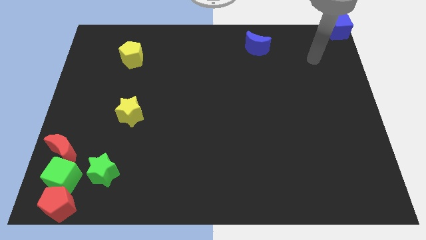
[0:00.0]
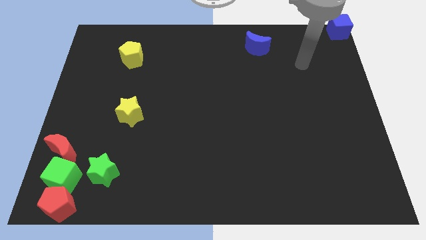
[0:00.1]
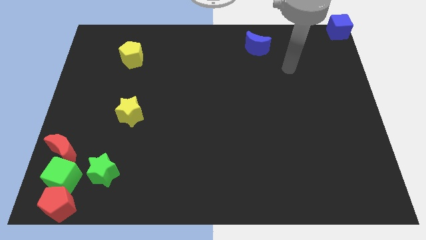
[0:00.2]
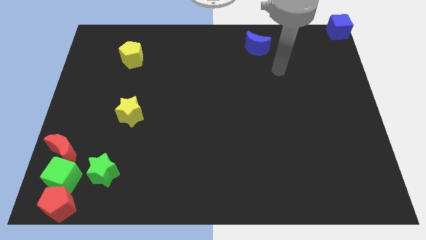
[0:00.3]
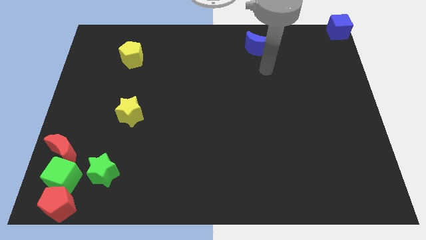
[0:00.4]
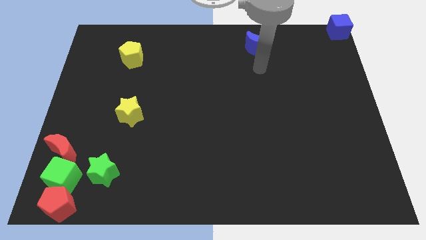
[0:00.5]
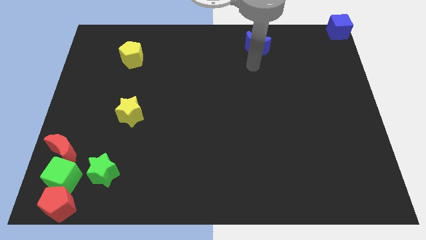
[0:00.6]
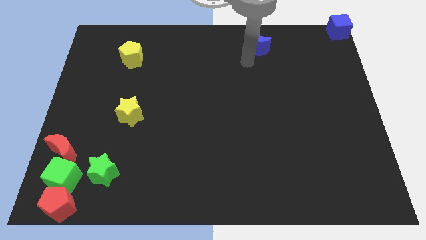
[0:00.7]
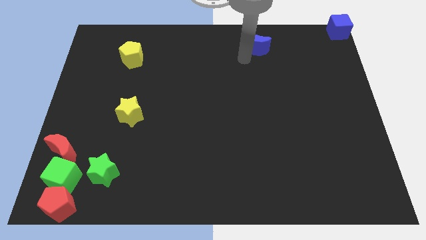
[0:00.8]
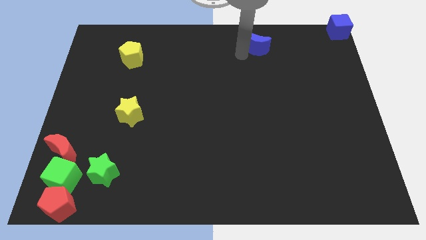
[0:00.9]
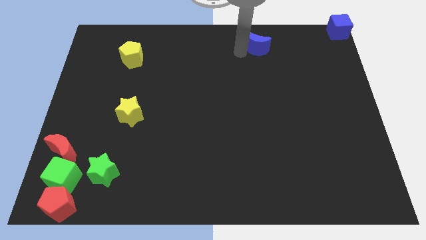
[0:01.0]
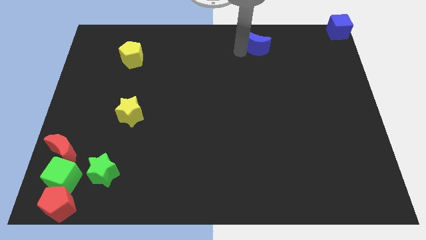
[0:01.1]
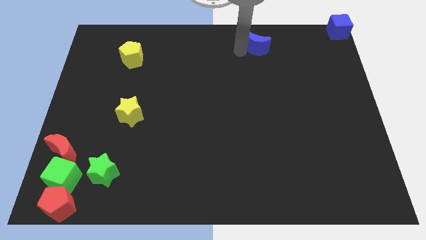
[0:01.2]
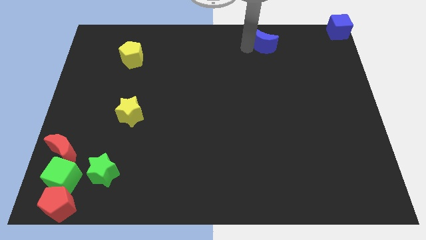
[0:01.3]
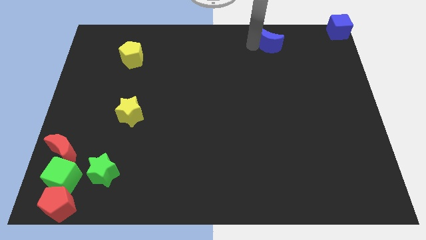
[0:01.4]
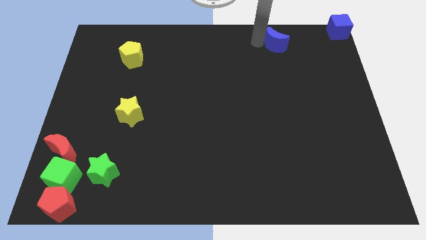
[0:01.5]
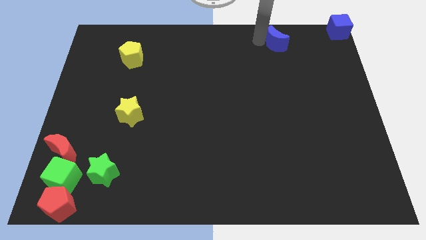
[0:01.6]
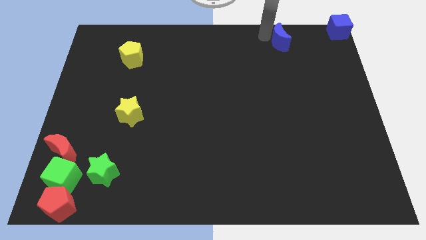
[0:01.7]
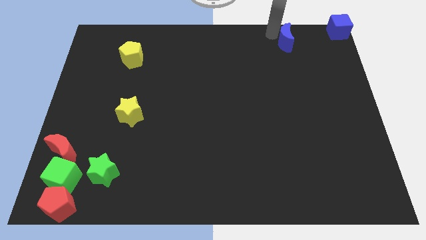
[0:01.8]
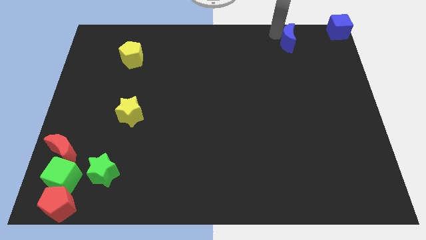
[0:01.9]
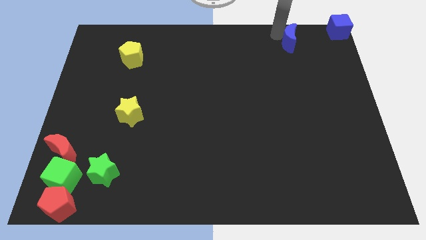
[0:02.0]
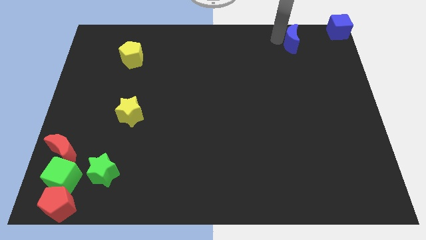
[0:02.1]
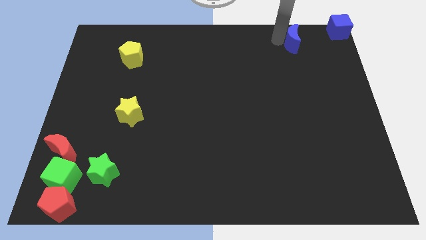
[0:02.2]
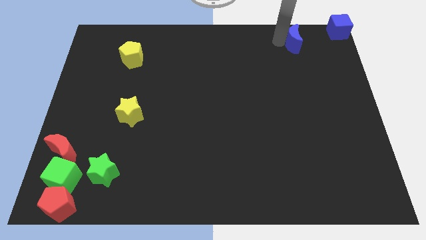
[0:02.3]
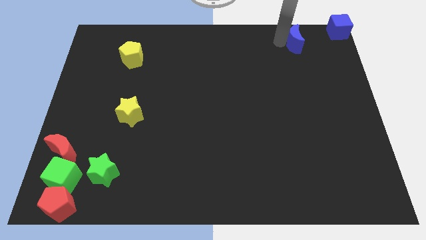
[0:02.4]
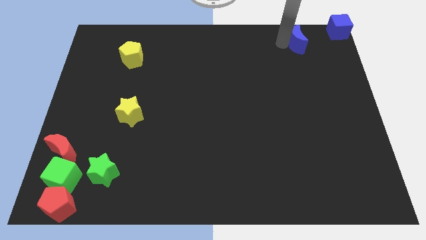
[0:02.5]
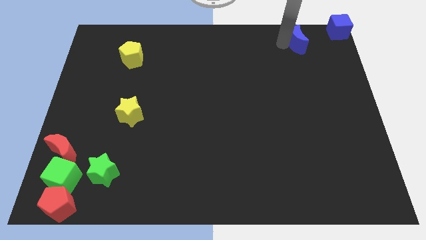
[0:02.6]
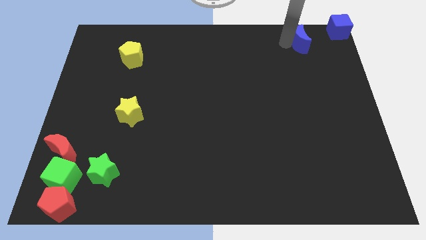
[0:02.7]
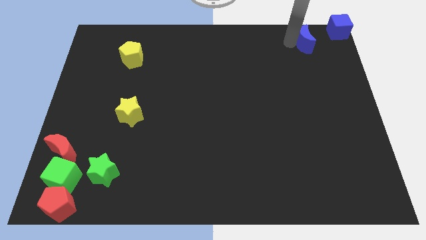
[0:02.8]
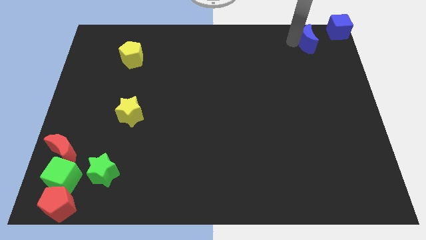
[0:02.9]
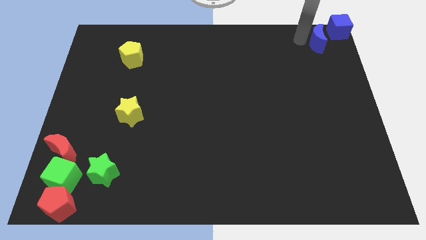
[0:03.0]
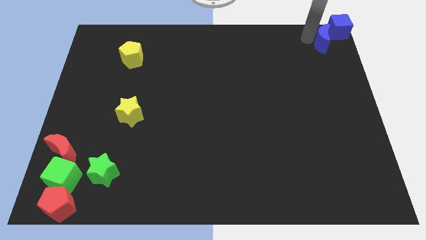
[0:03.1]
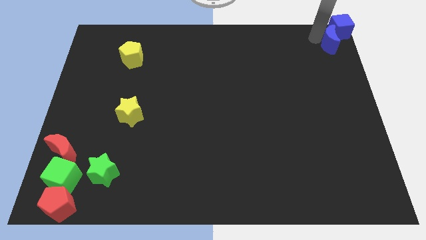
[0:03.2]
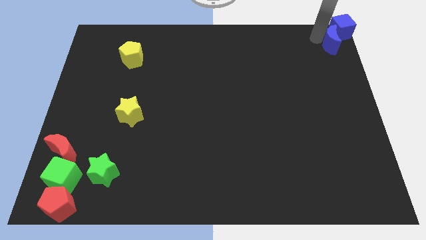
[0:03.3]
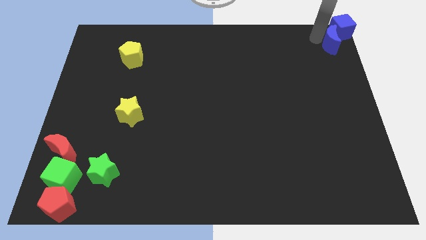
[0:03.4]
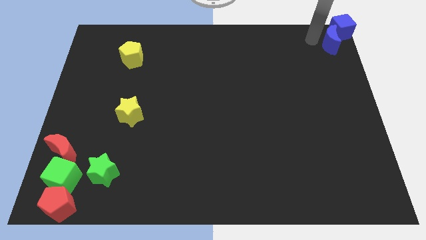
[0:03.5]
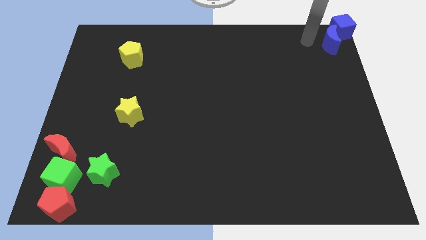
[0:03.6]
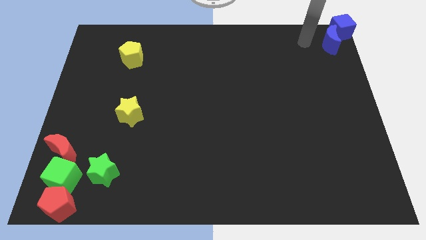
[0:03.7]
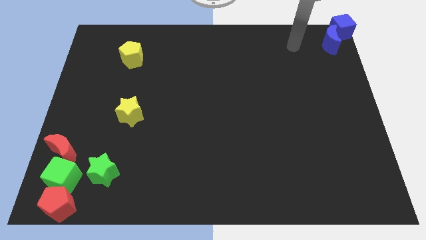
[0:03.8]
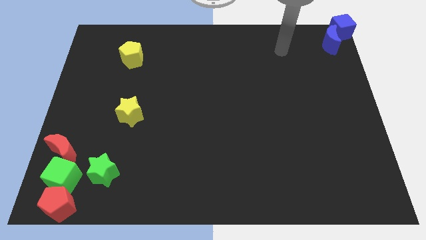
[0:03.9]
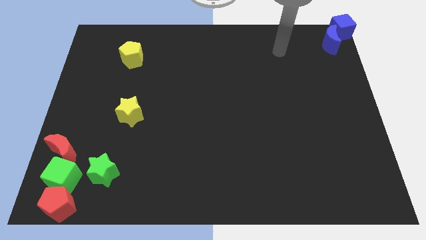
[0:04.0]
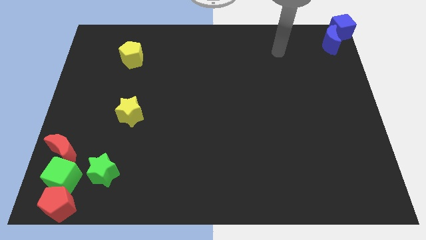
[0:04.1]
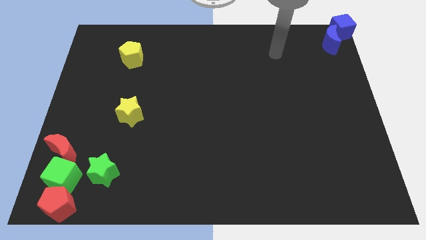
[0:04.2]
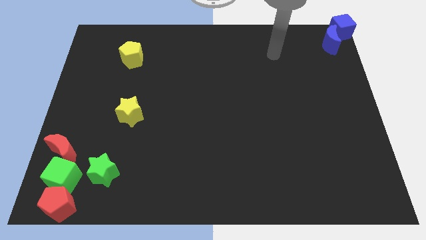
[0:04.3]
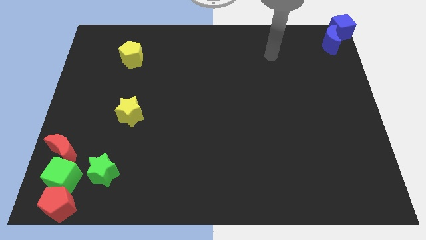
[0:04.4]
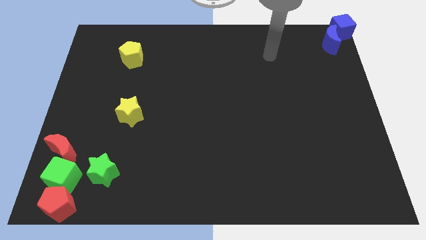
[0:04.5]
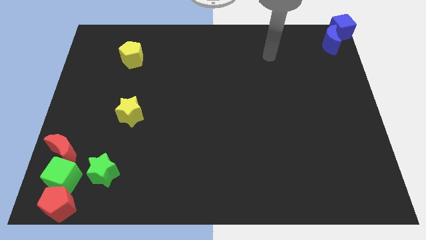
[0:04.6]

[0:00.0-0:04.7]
slide blue moon into the blue cube

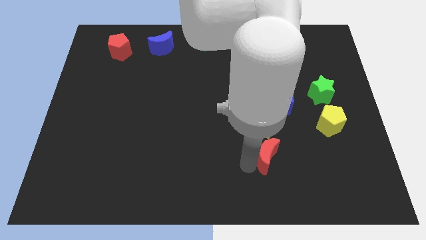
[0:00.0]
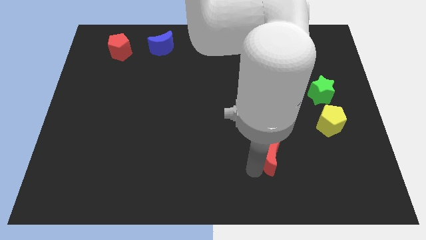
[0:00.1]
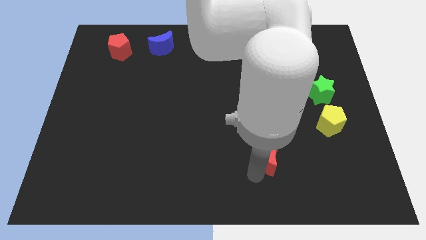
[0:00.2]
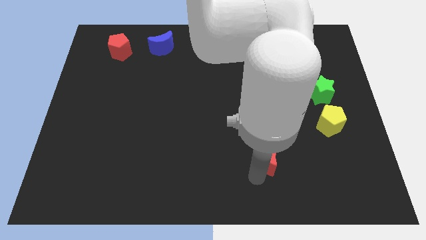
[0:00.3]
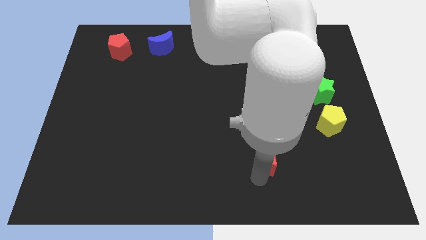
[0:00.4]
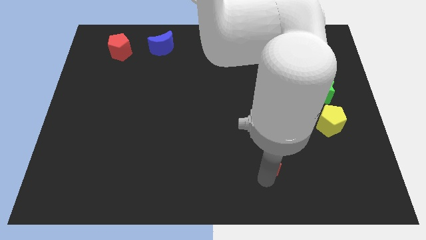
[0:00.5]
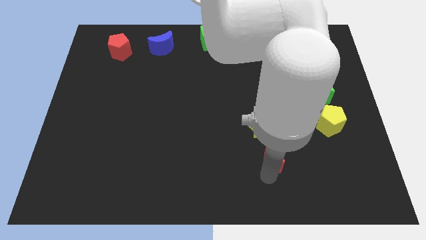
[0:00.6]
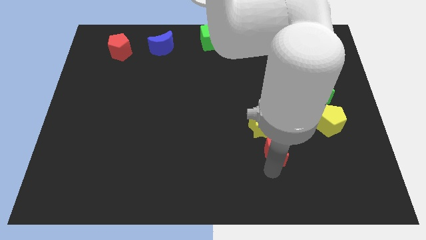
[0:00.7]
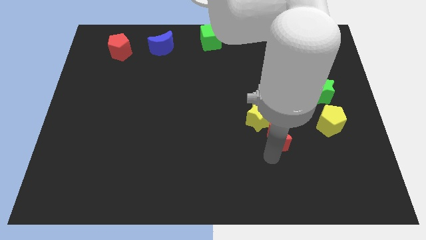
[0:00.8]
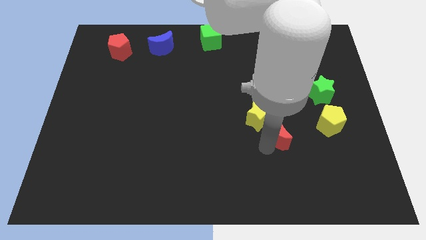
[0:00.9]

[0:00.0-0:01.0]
move the red crescent into the yellow star

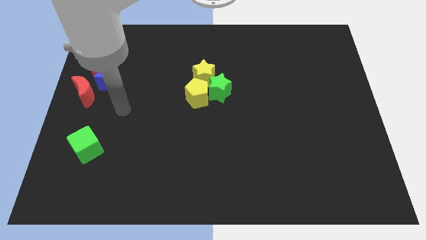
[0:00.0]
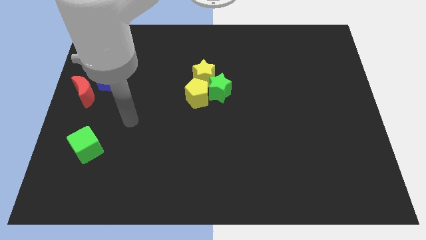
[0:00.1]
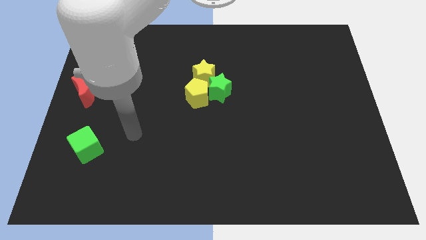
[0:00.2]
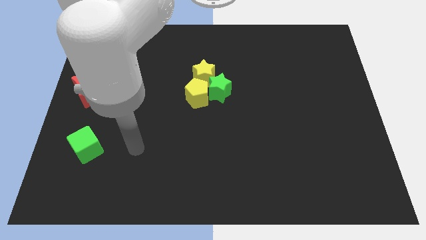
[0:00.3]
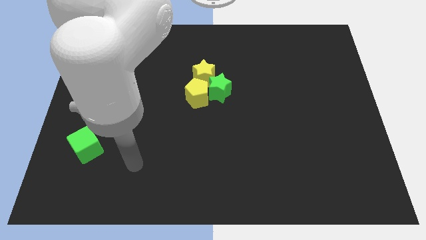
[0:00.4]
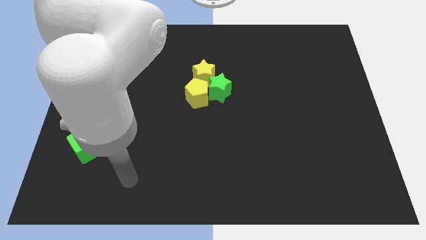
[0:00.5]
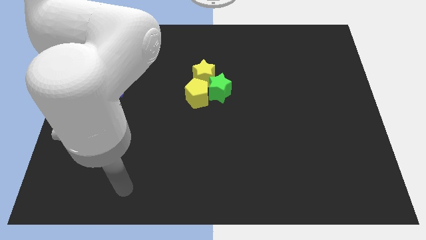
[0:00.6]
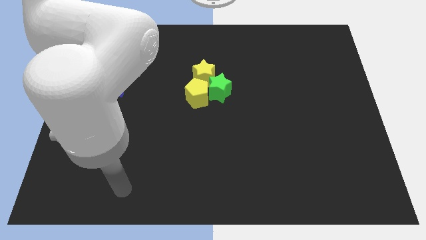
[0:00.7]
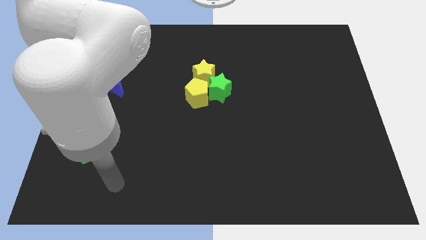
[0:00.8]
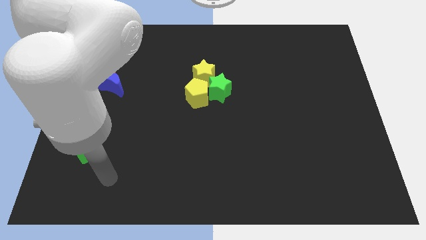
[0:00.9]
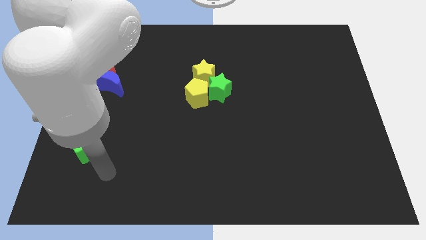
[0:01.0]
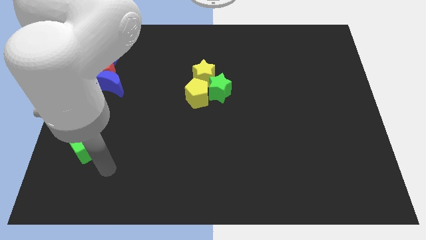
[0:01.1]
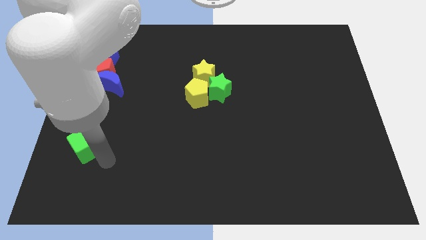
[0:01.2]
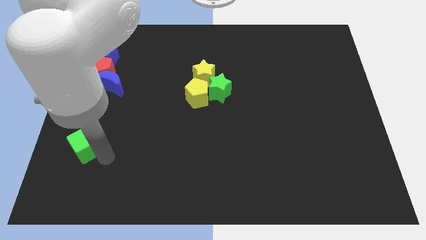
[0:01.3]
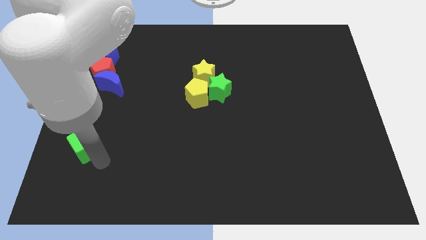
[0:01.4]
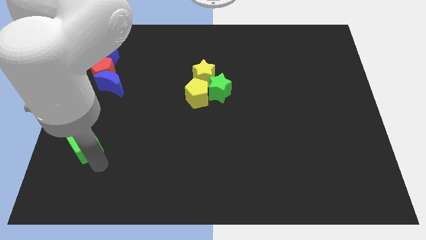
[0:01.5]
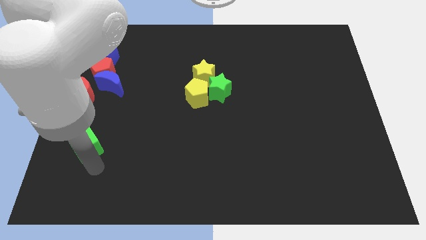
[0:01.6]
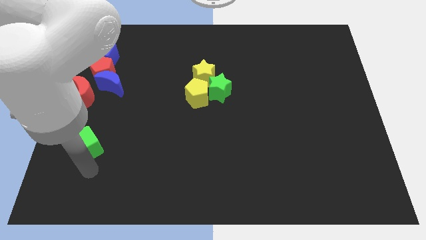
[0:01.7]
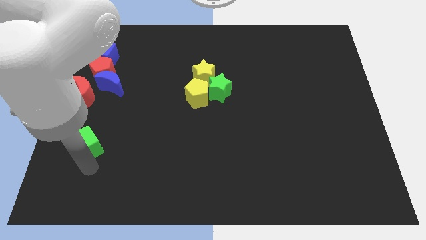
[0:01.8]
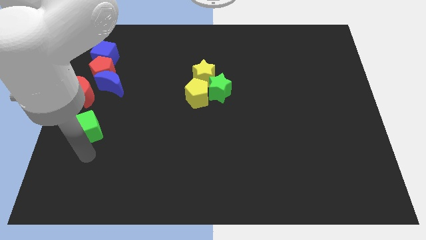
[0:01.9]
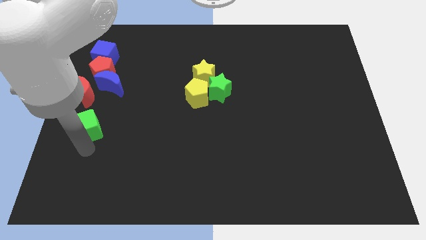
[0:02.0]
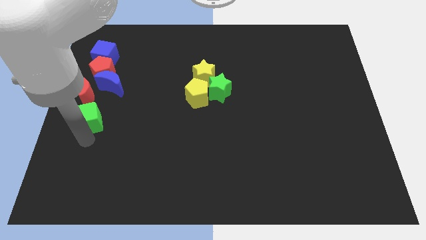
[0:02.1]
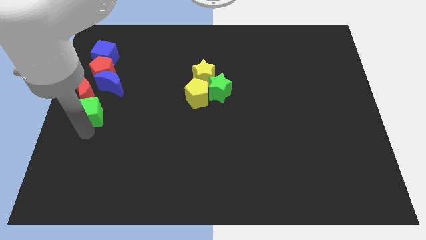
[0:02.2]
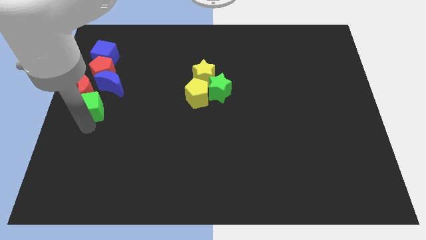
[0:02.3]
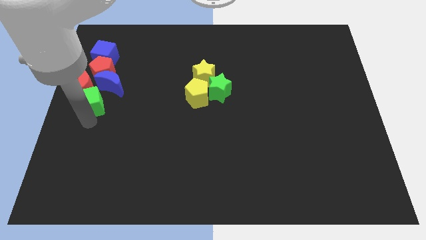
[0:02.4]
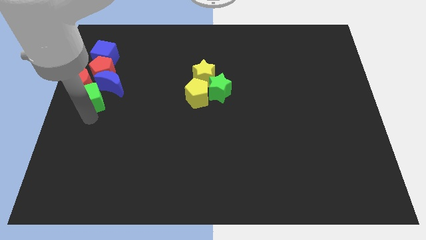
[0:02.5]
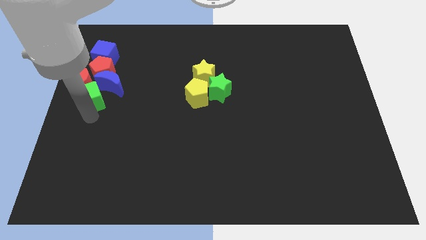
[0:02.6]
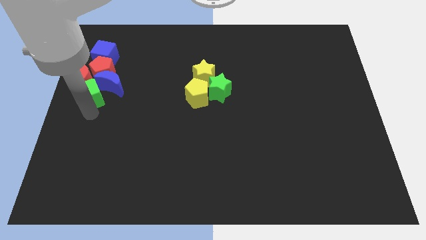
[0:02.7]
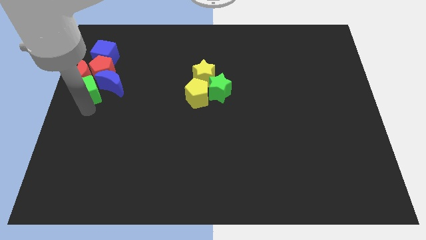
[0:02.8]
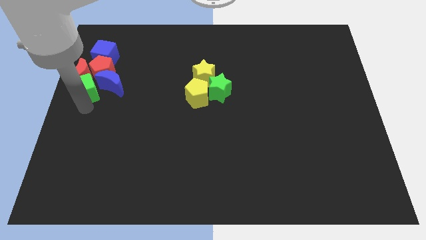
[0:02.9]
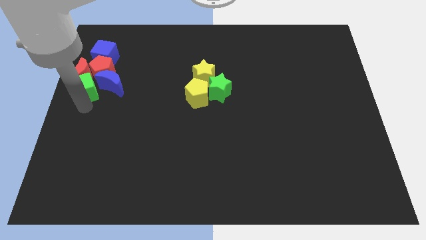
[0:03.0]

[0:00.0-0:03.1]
move the green cube to the group of blocks at the top left side of the board

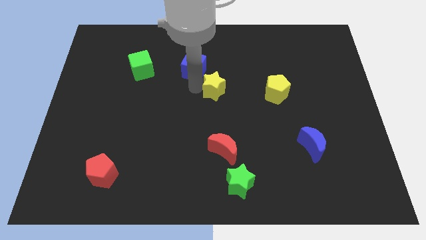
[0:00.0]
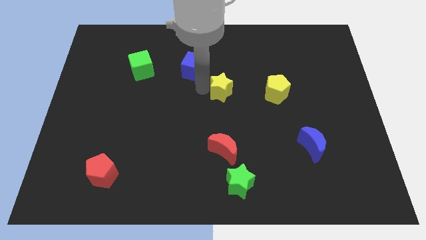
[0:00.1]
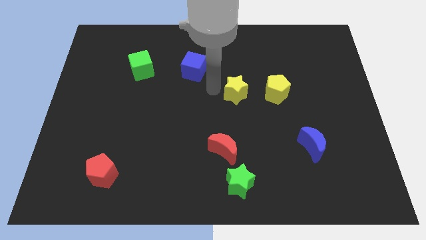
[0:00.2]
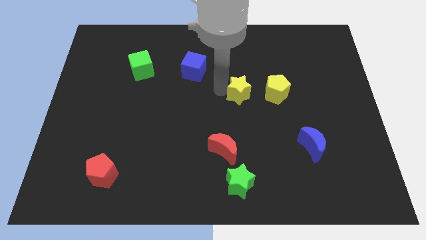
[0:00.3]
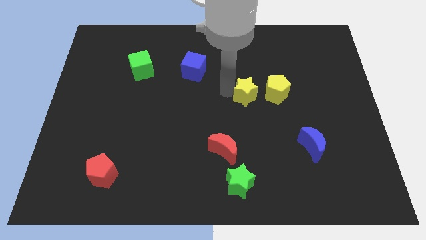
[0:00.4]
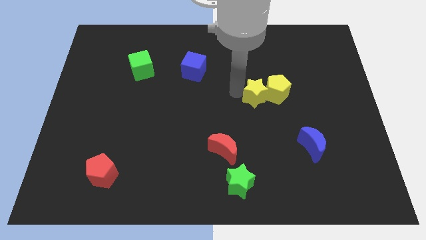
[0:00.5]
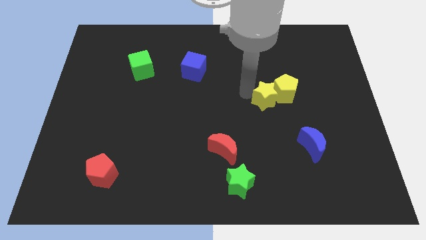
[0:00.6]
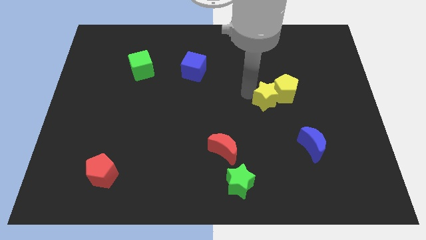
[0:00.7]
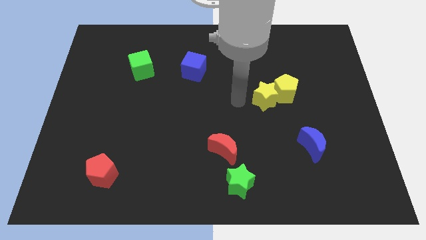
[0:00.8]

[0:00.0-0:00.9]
push the yellow pentagon with the yellow star
